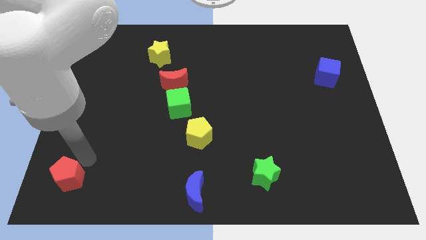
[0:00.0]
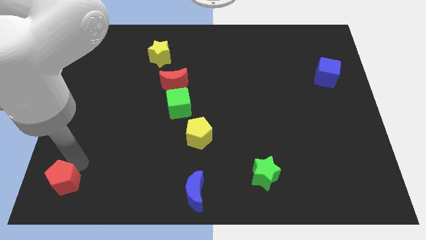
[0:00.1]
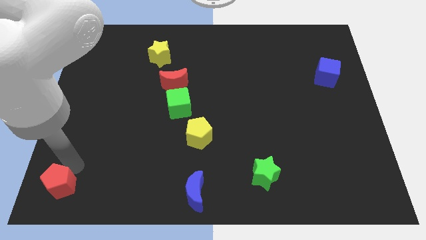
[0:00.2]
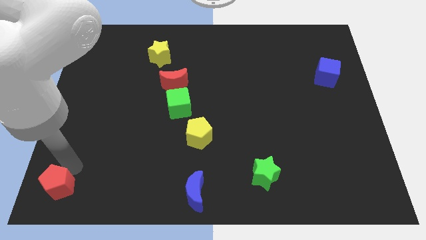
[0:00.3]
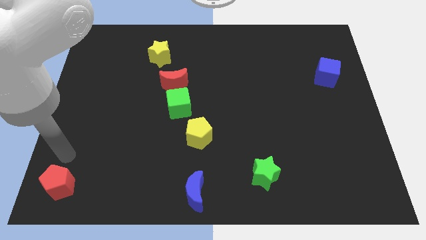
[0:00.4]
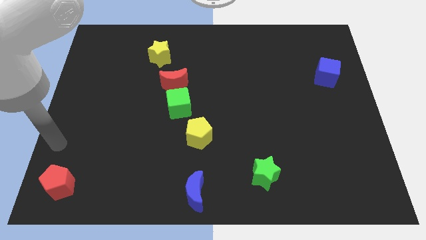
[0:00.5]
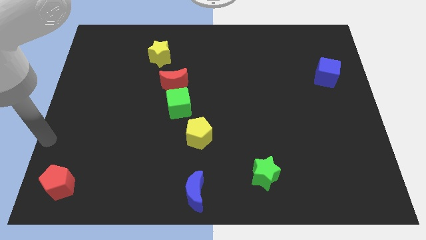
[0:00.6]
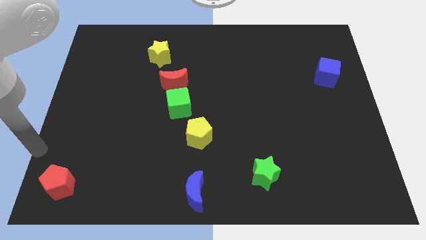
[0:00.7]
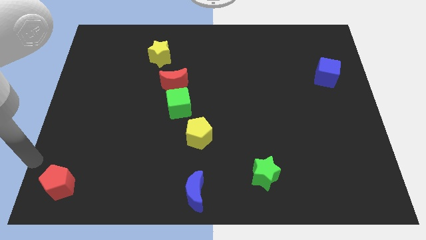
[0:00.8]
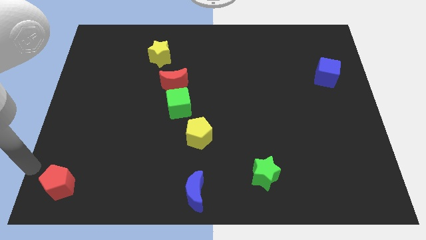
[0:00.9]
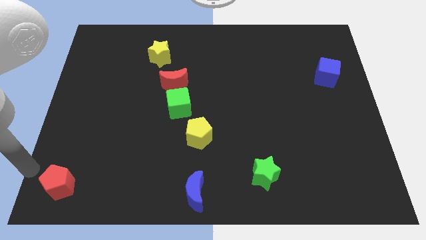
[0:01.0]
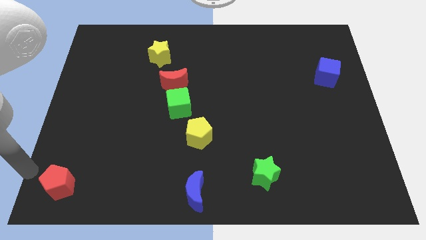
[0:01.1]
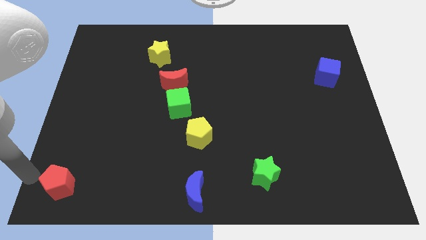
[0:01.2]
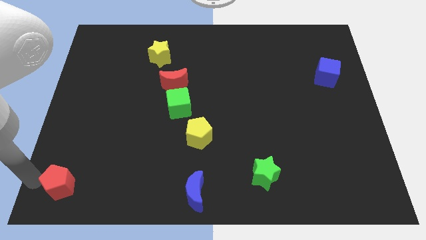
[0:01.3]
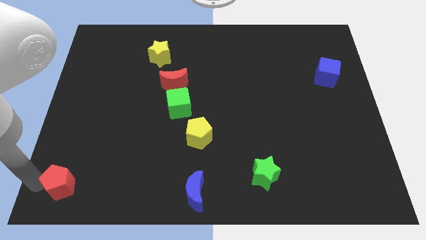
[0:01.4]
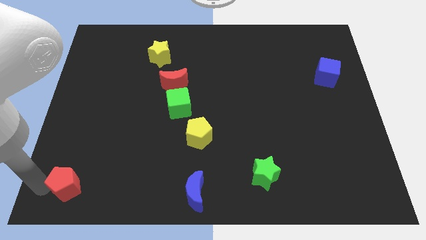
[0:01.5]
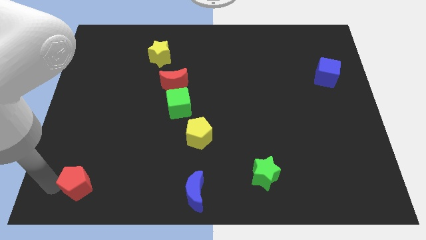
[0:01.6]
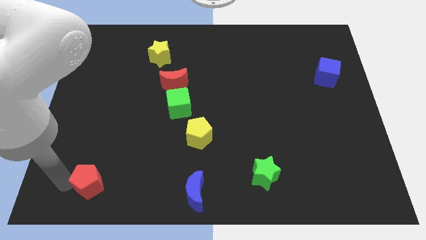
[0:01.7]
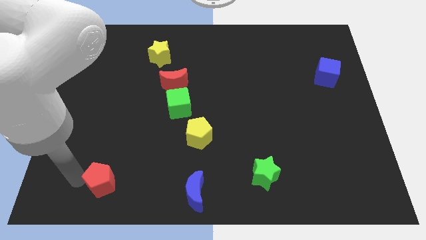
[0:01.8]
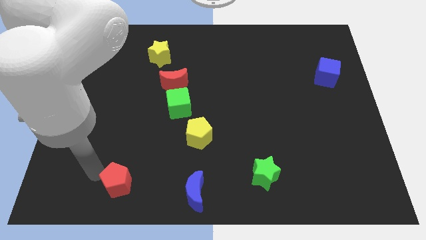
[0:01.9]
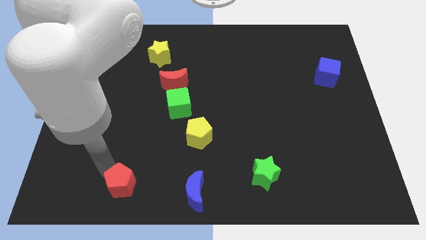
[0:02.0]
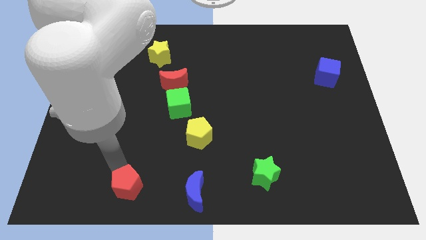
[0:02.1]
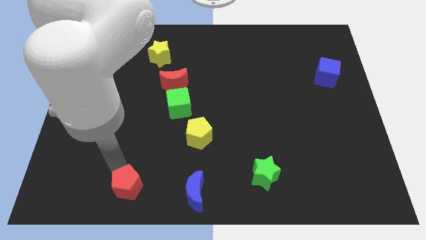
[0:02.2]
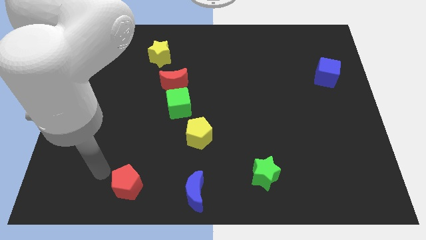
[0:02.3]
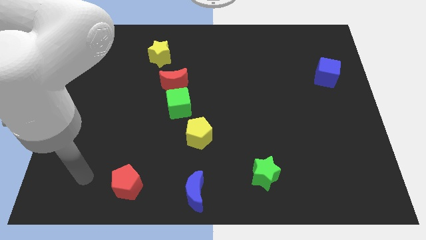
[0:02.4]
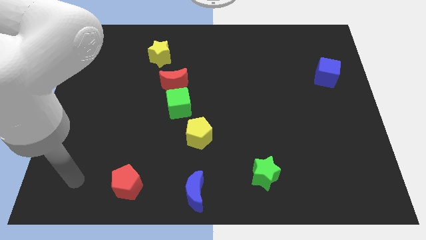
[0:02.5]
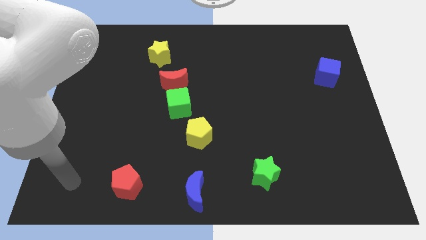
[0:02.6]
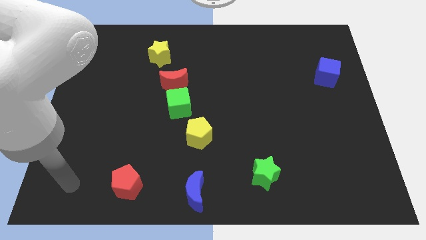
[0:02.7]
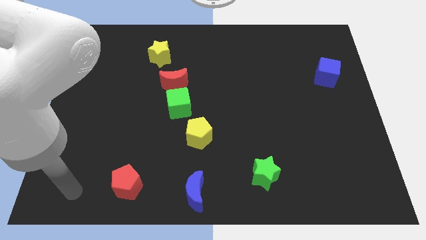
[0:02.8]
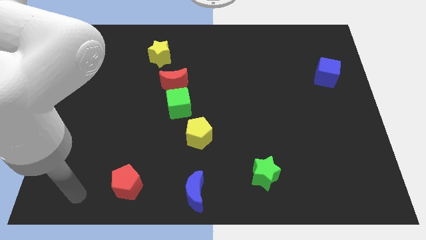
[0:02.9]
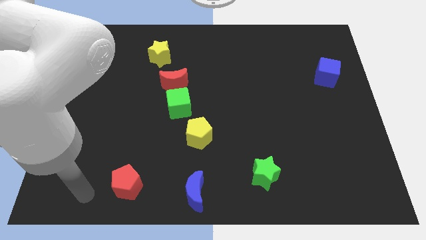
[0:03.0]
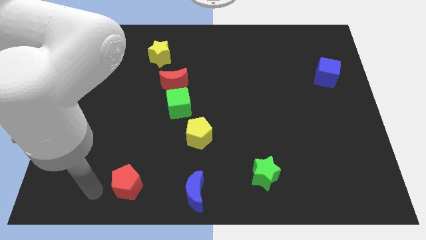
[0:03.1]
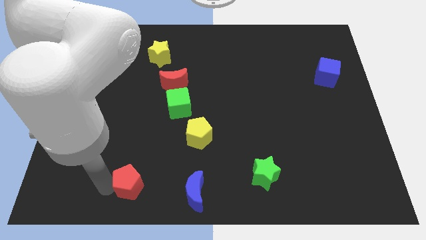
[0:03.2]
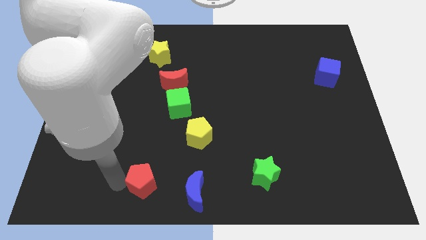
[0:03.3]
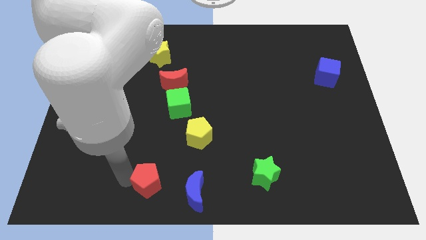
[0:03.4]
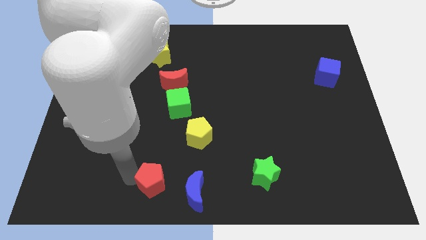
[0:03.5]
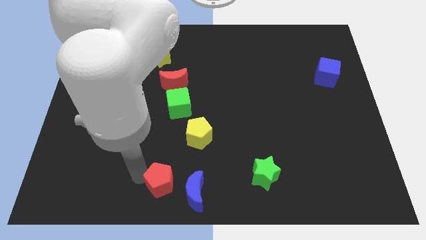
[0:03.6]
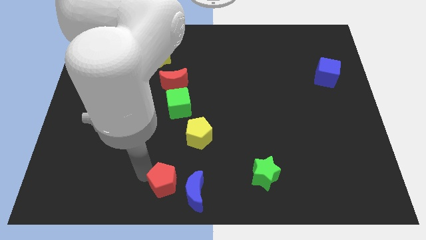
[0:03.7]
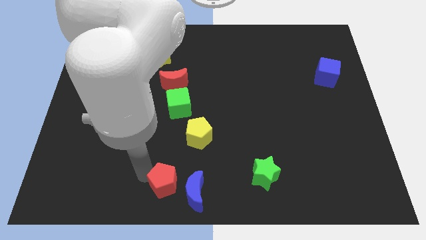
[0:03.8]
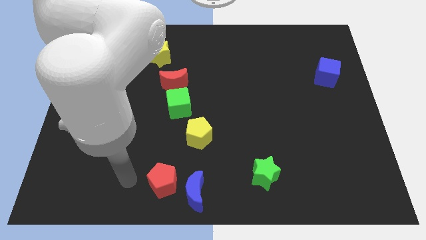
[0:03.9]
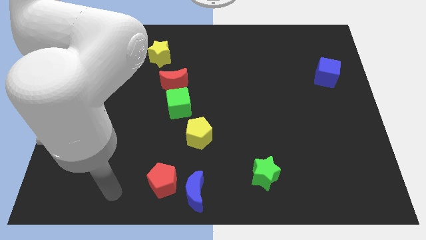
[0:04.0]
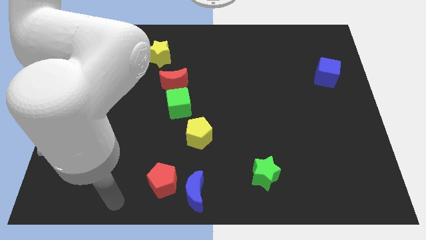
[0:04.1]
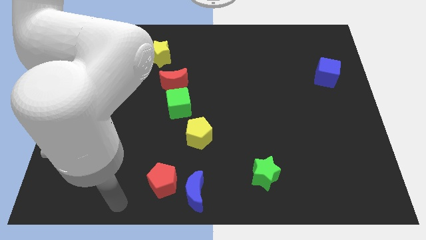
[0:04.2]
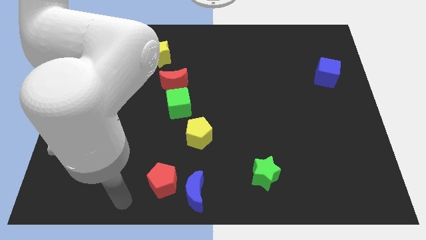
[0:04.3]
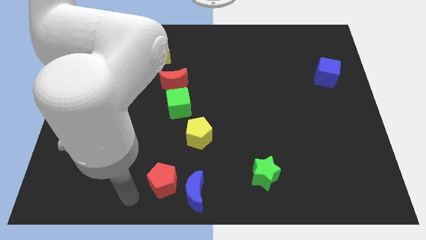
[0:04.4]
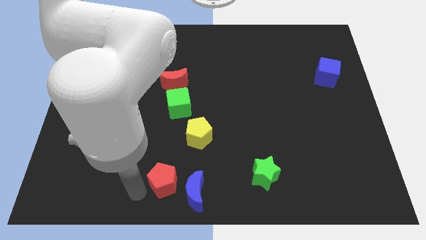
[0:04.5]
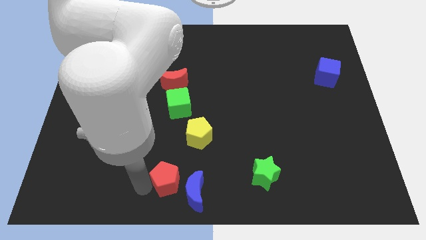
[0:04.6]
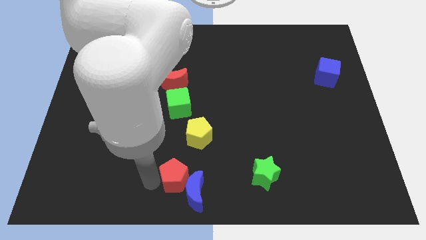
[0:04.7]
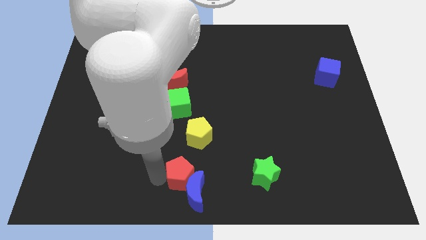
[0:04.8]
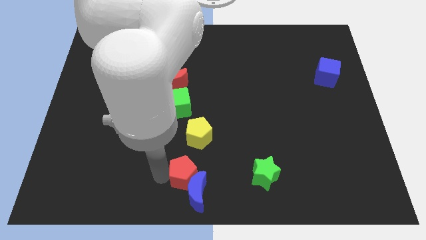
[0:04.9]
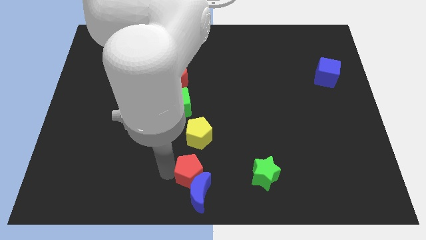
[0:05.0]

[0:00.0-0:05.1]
move red pentagon into the blue crescent

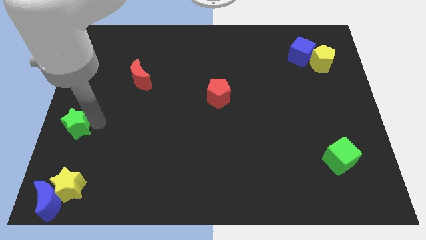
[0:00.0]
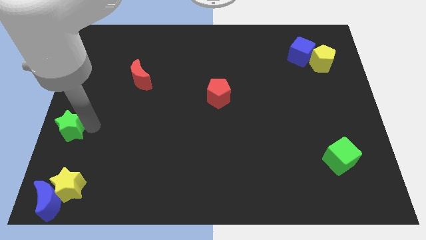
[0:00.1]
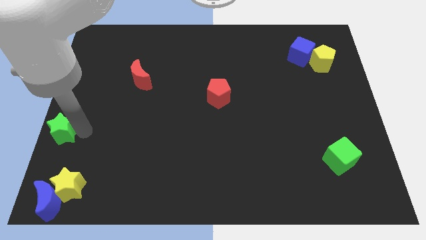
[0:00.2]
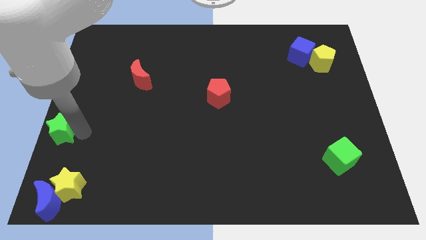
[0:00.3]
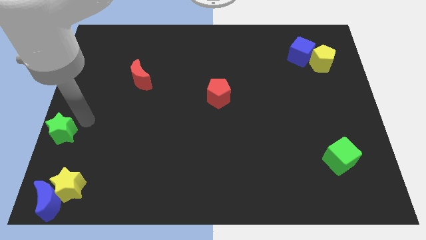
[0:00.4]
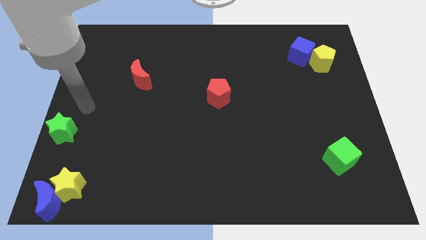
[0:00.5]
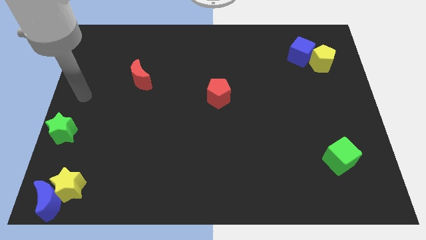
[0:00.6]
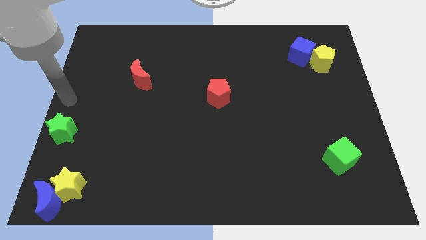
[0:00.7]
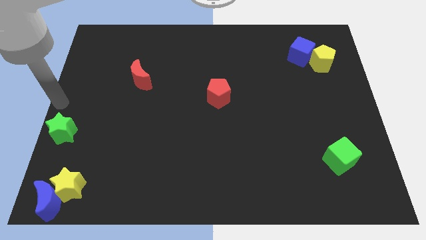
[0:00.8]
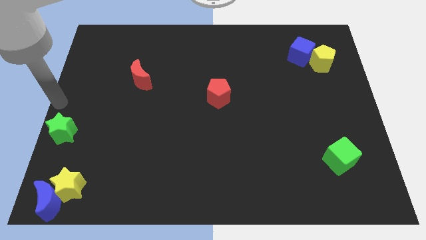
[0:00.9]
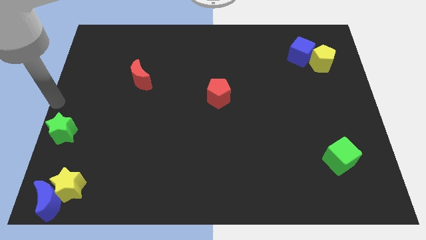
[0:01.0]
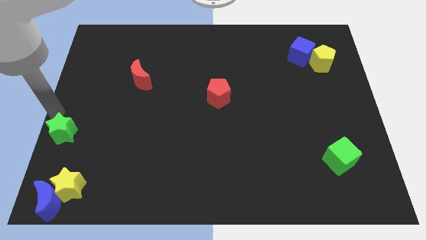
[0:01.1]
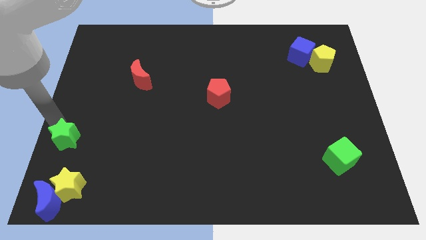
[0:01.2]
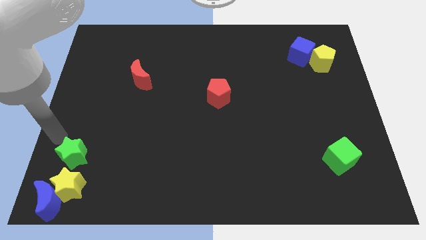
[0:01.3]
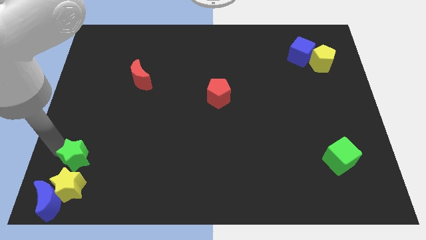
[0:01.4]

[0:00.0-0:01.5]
place the green star above the yellow star

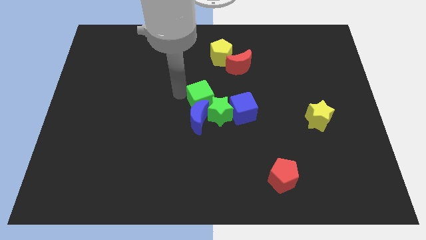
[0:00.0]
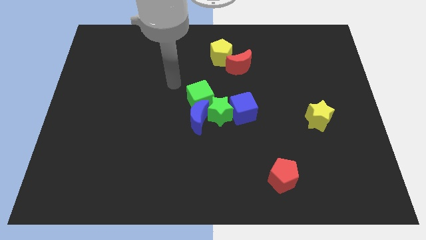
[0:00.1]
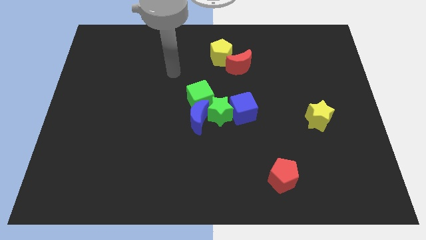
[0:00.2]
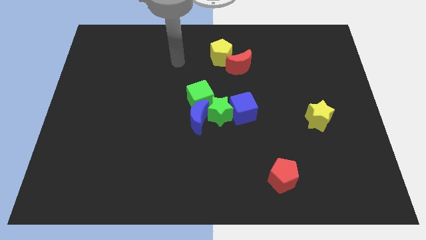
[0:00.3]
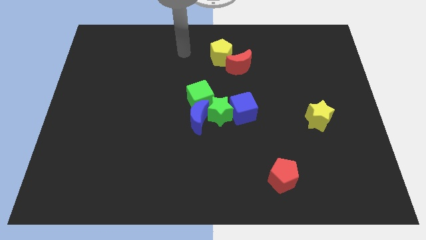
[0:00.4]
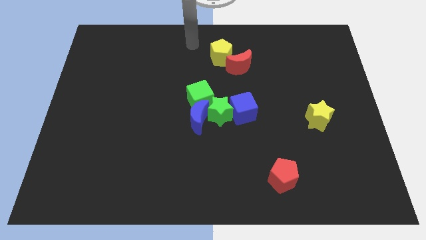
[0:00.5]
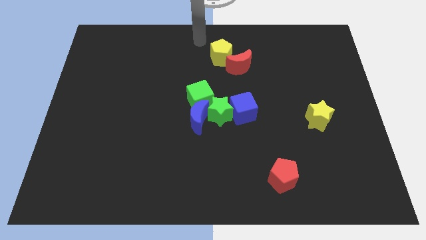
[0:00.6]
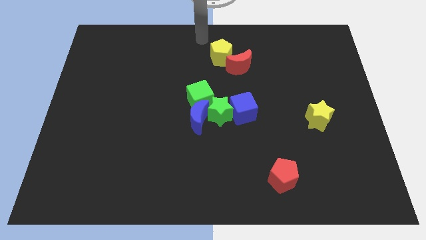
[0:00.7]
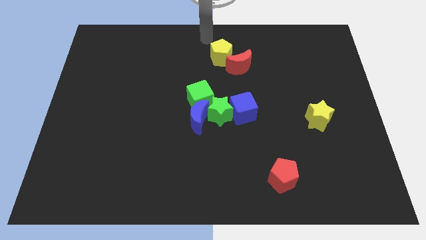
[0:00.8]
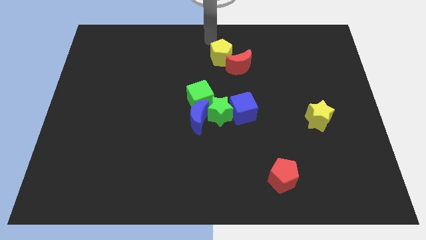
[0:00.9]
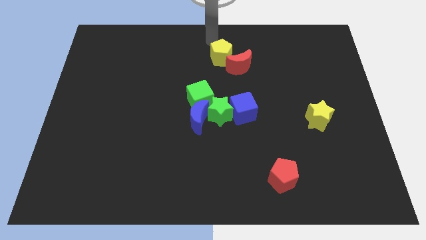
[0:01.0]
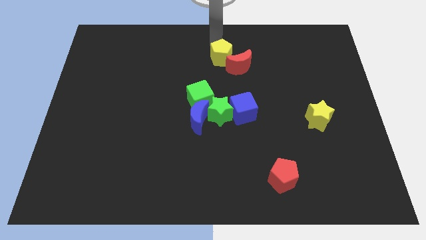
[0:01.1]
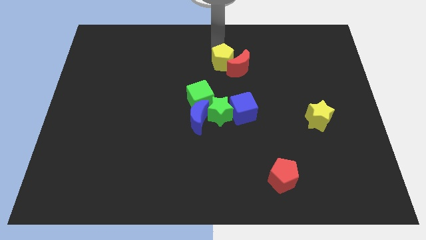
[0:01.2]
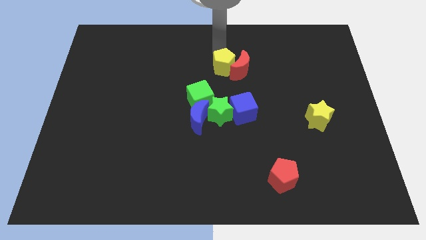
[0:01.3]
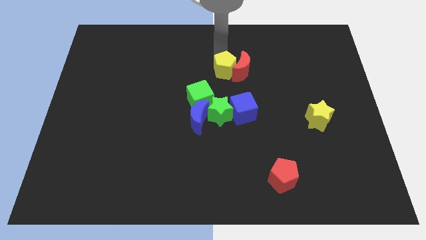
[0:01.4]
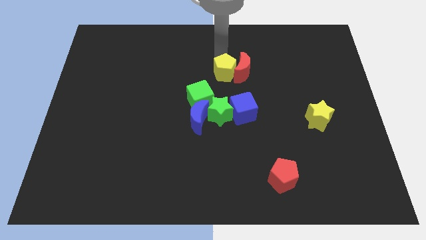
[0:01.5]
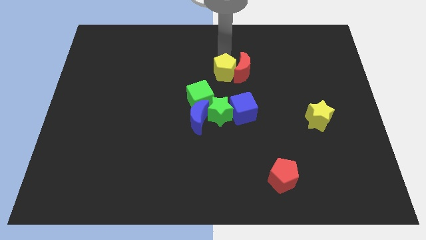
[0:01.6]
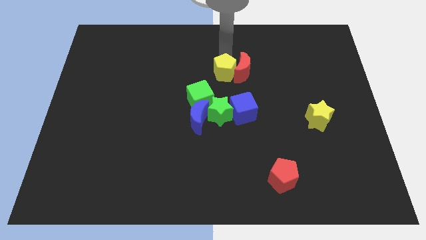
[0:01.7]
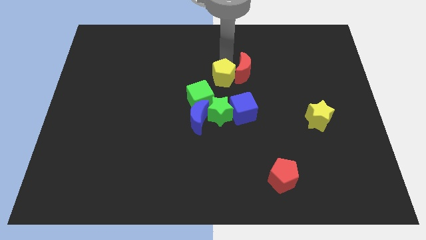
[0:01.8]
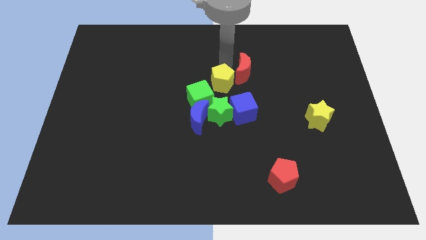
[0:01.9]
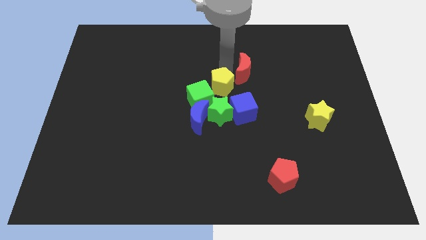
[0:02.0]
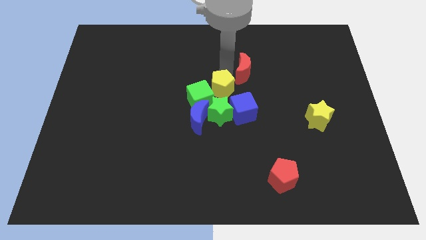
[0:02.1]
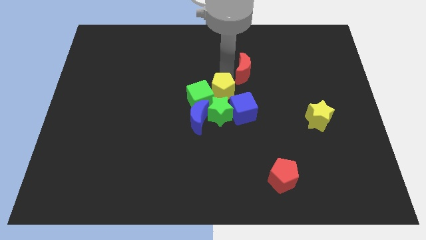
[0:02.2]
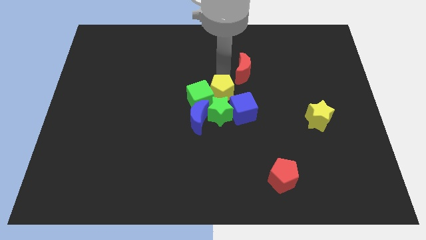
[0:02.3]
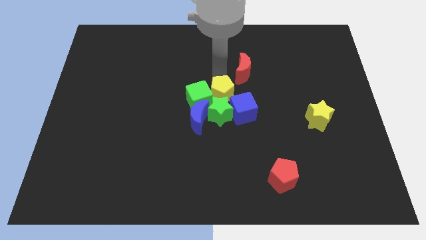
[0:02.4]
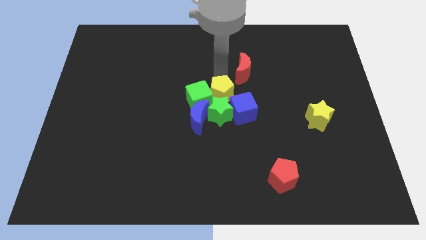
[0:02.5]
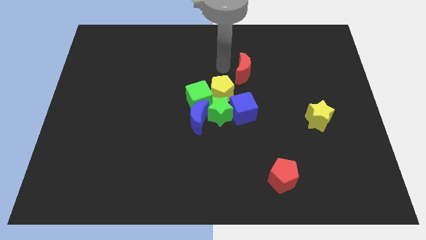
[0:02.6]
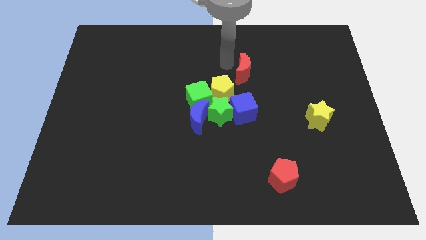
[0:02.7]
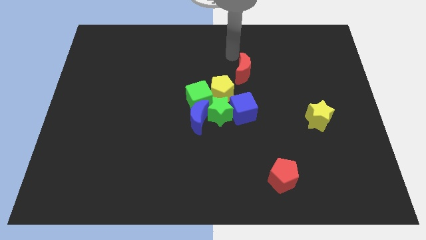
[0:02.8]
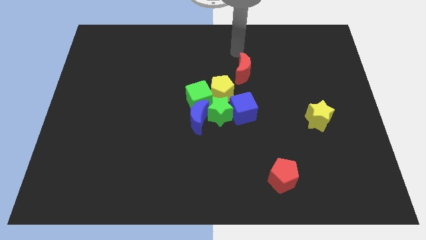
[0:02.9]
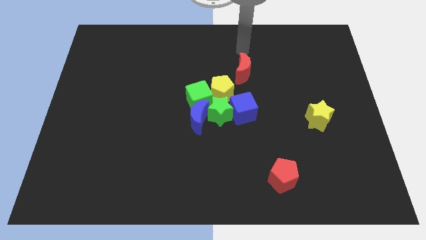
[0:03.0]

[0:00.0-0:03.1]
place the yellow pentagon at the top of green star
